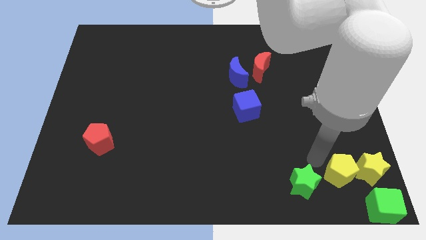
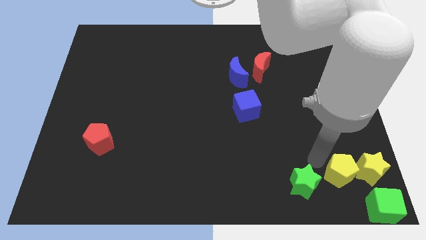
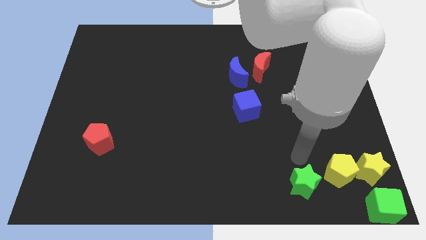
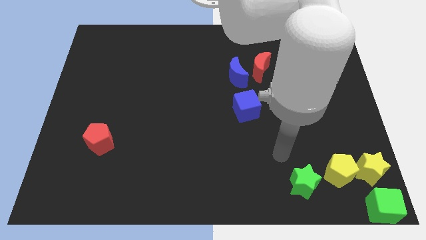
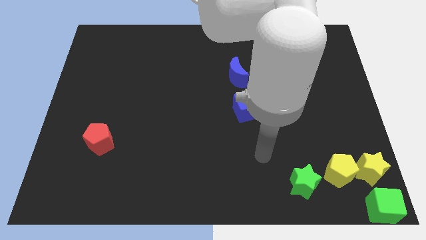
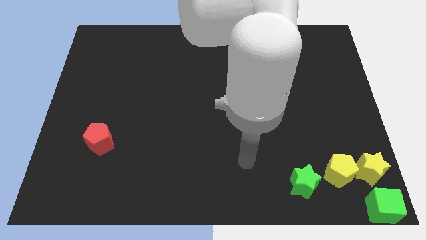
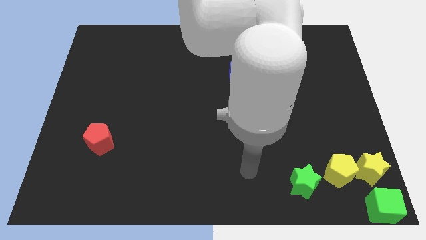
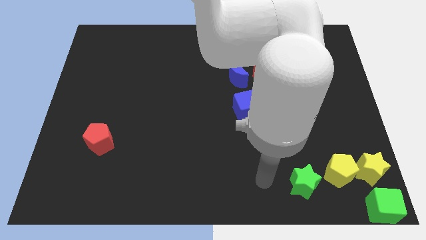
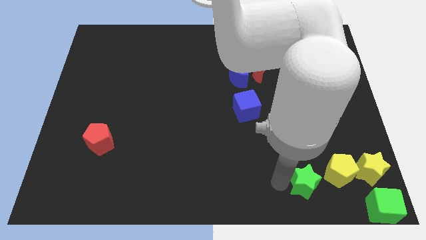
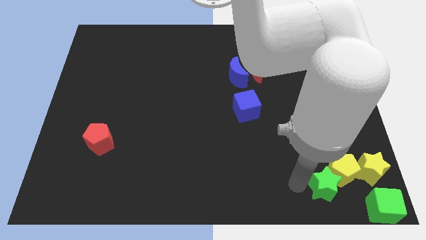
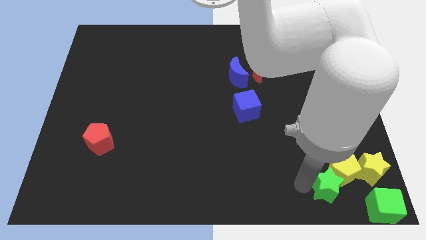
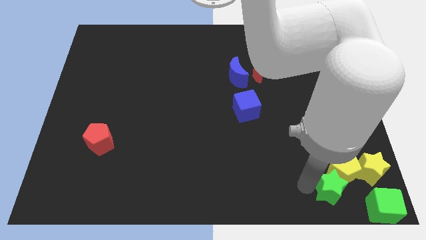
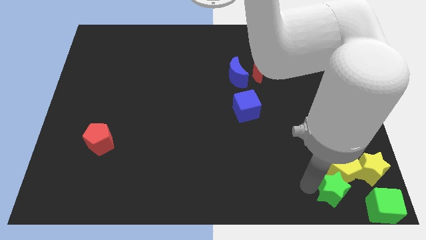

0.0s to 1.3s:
push the green star towards the yellow blocks

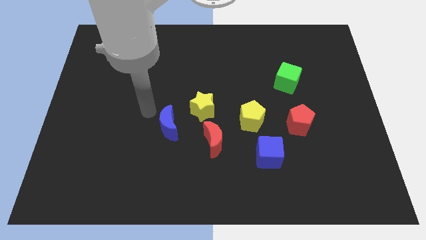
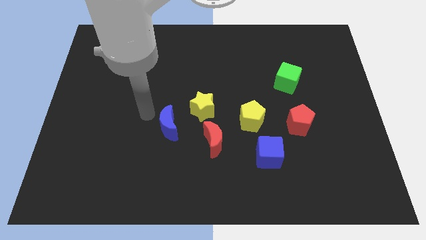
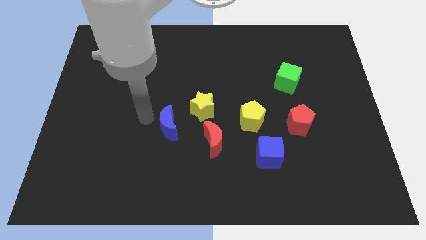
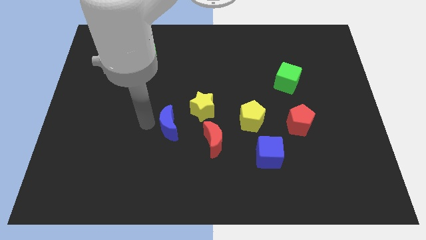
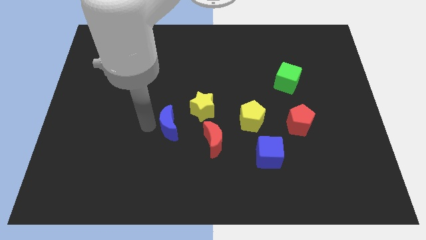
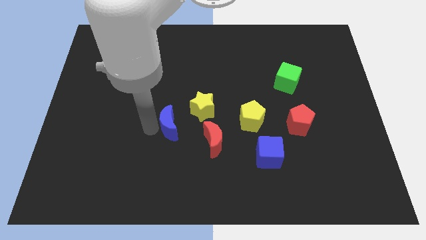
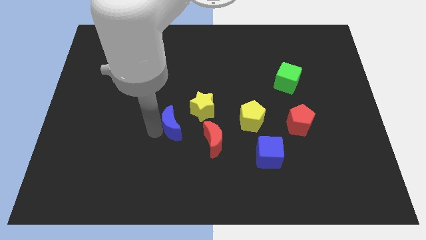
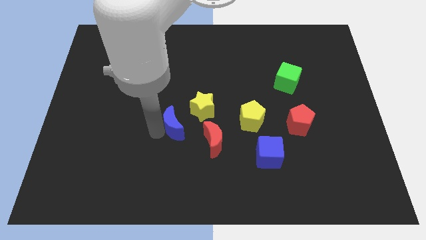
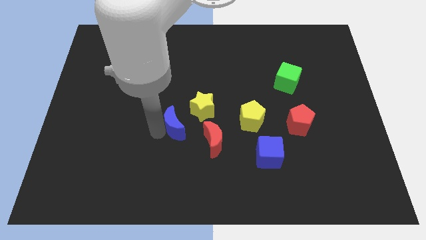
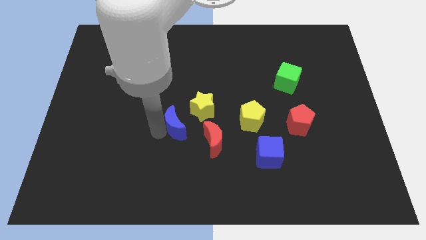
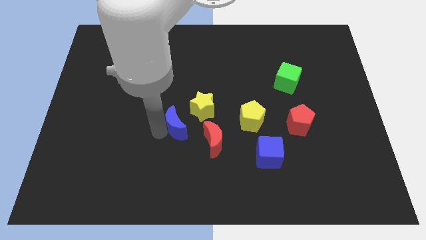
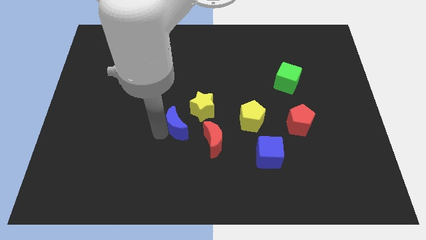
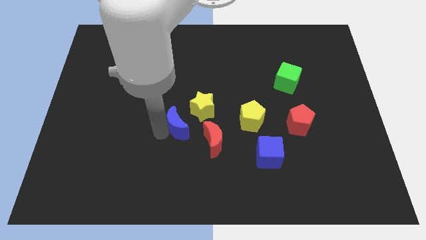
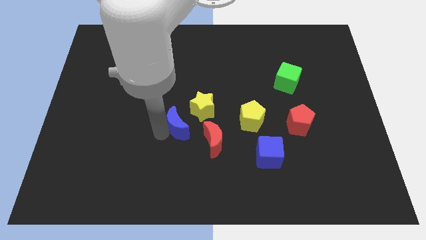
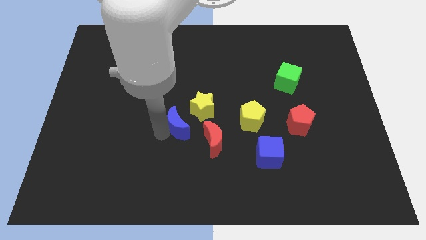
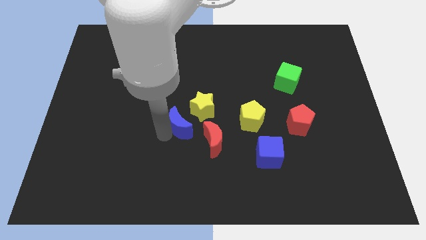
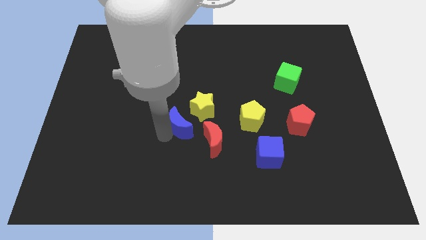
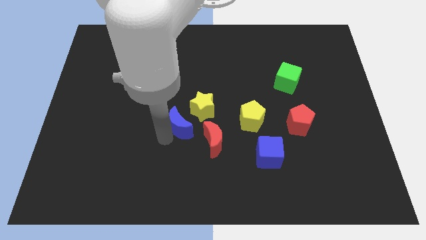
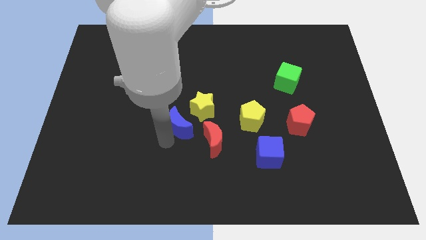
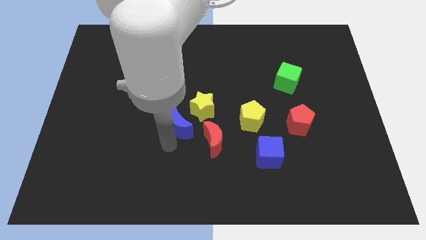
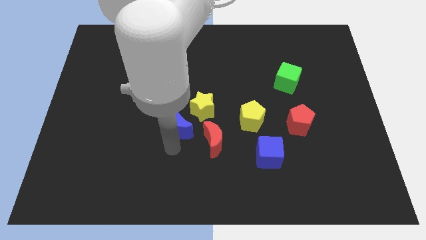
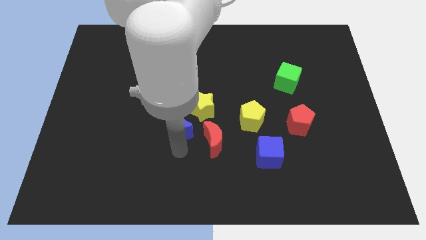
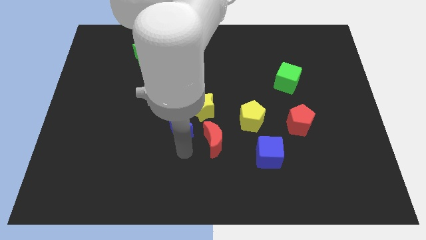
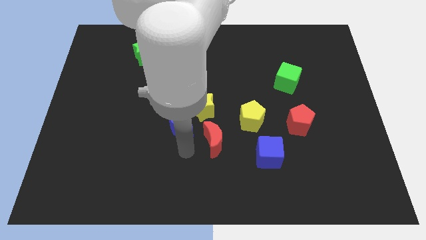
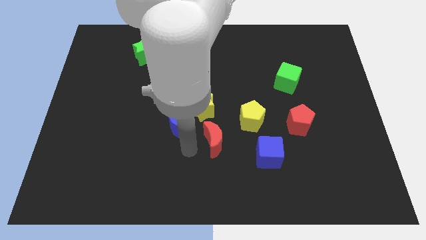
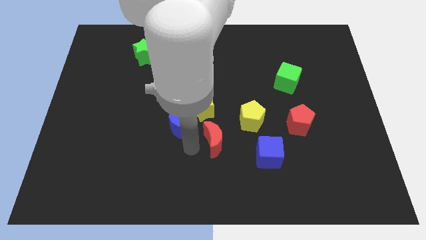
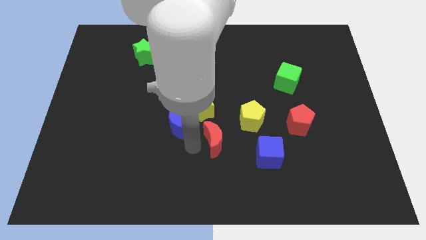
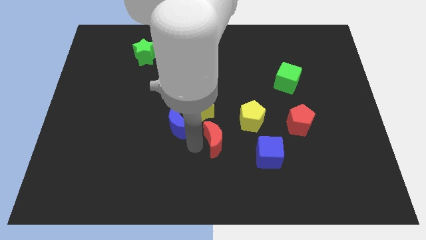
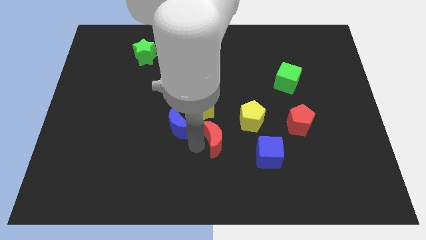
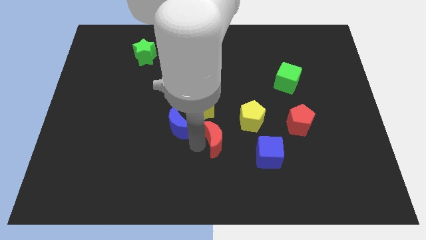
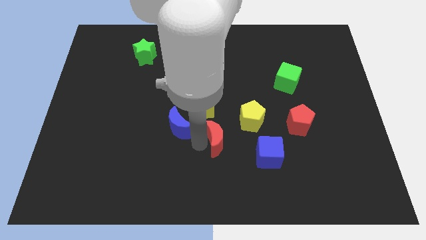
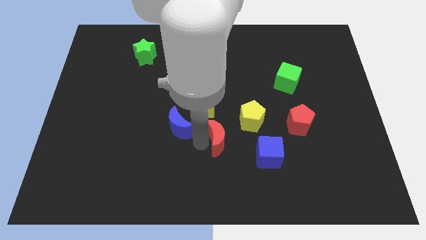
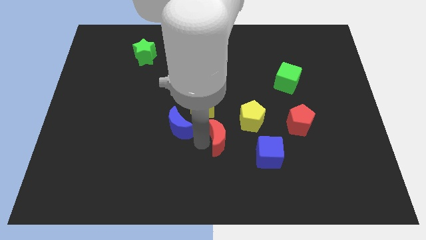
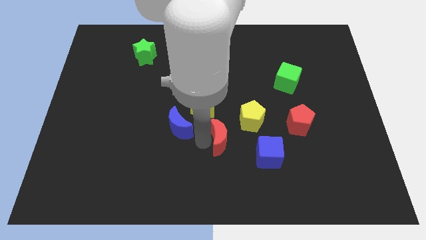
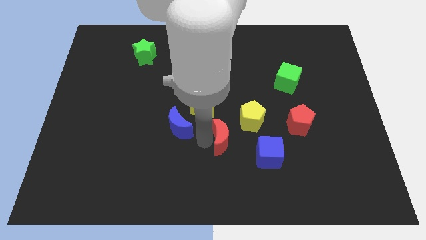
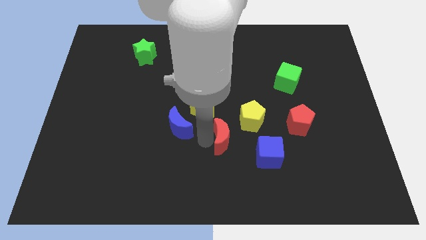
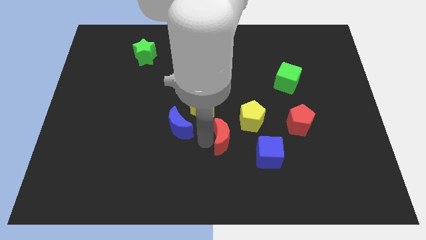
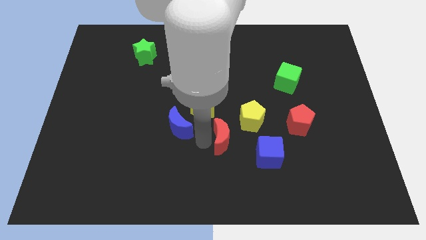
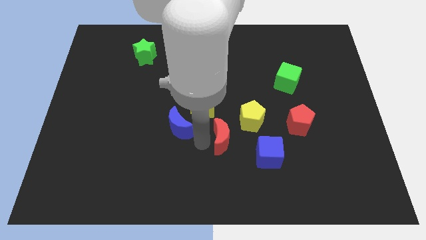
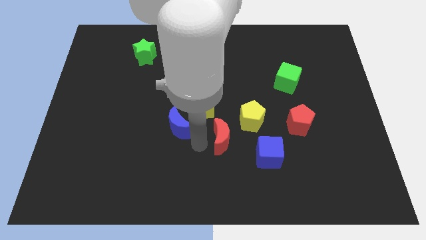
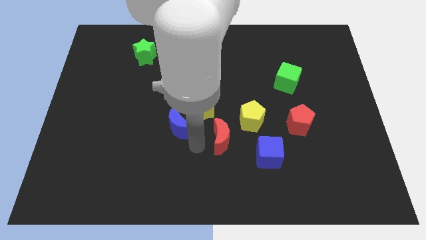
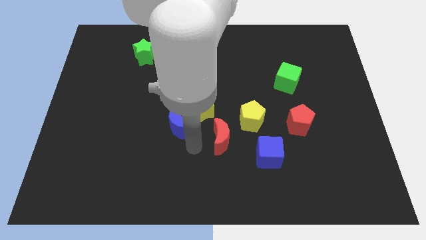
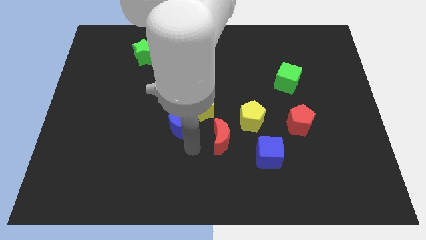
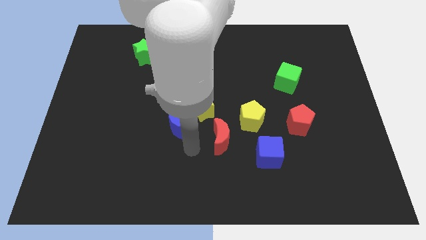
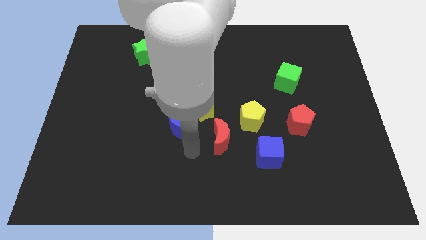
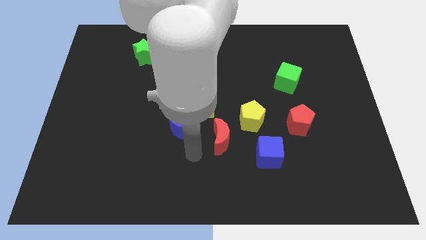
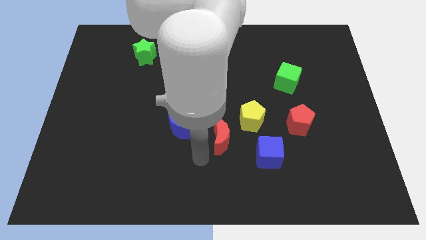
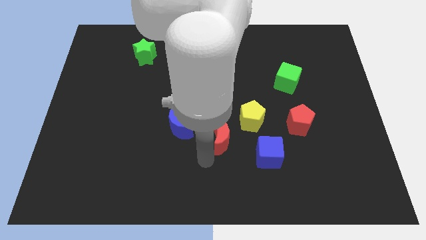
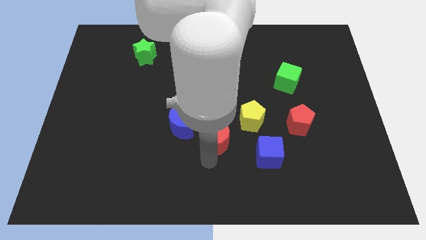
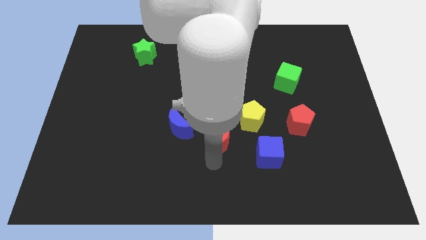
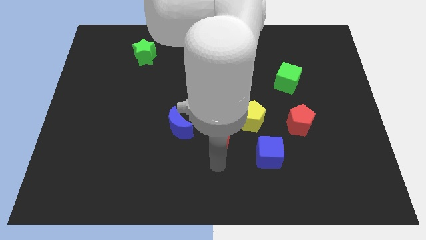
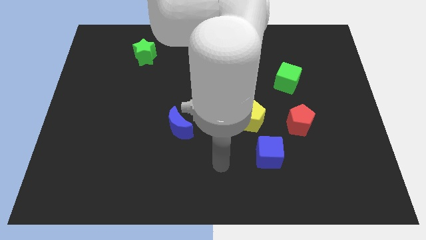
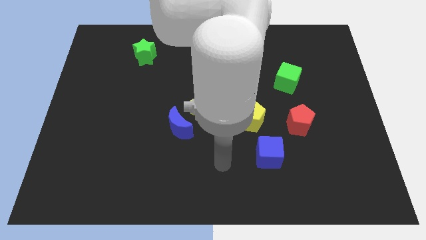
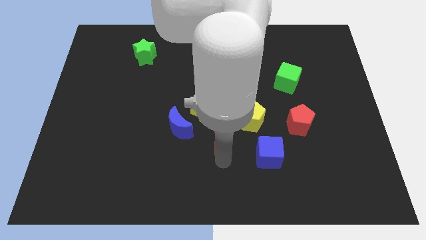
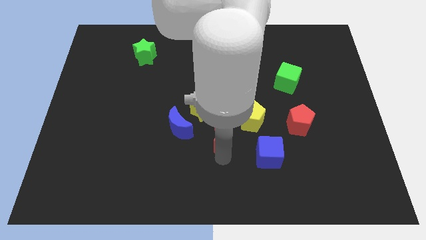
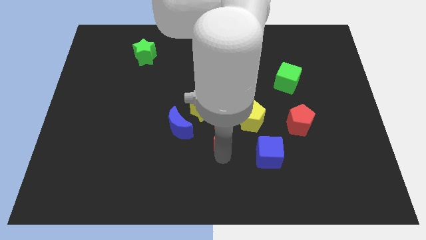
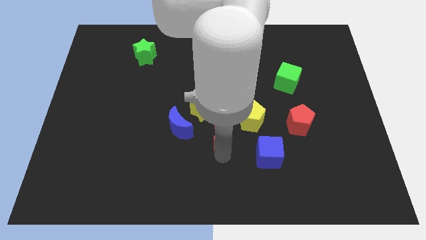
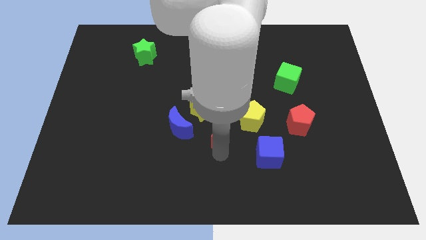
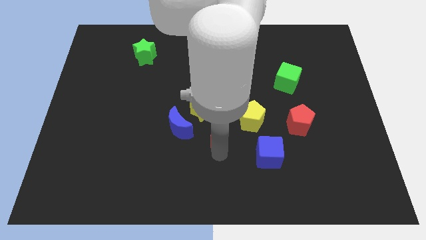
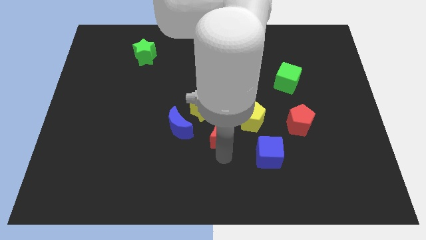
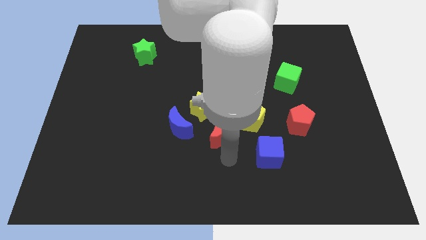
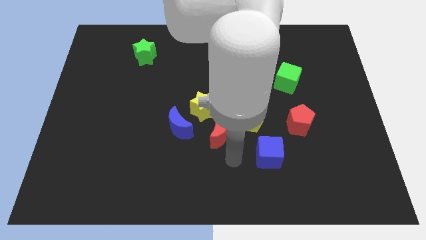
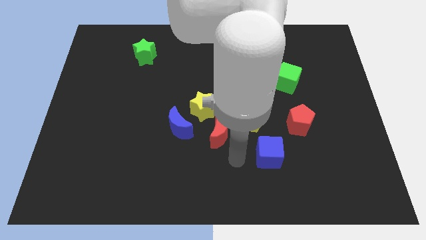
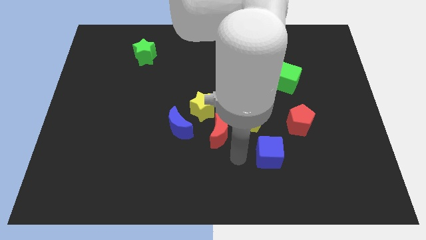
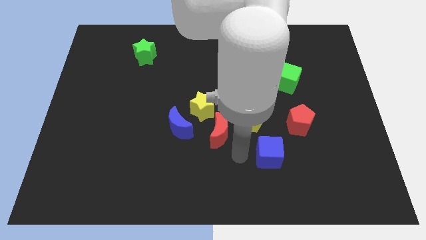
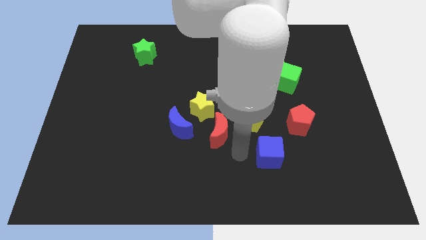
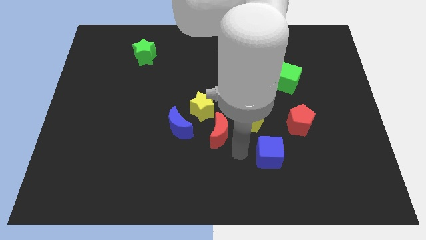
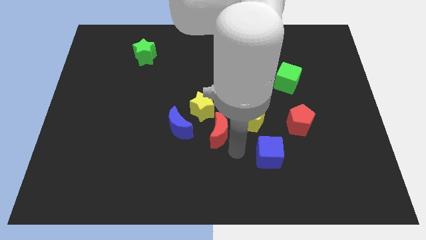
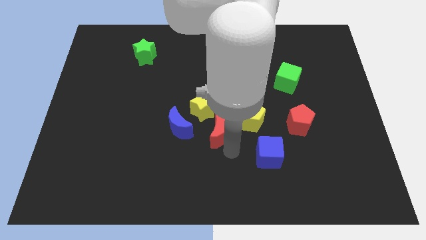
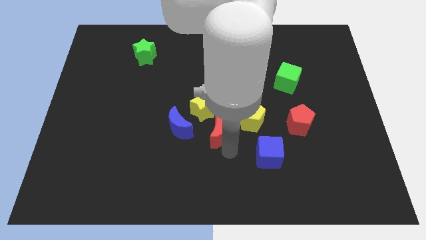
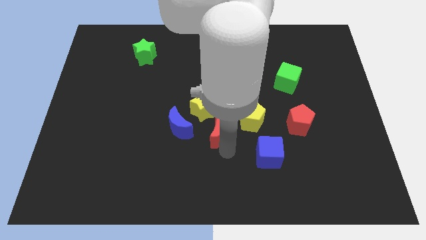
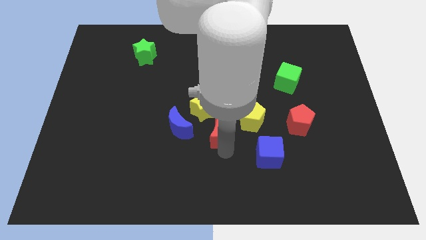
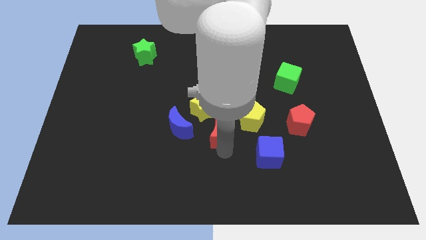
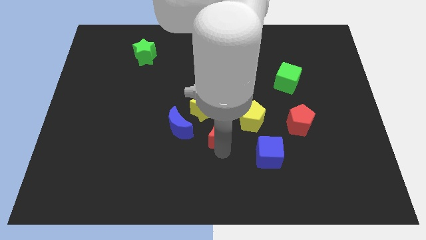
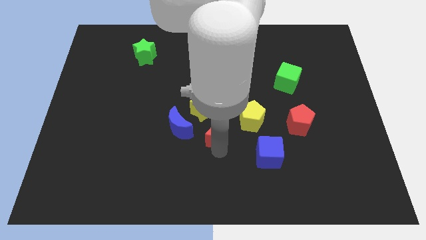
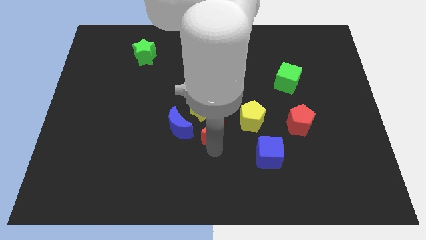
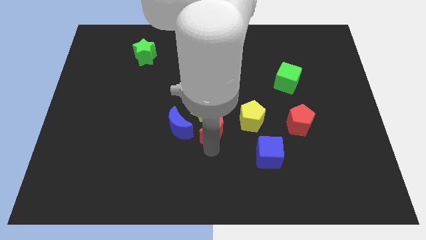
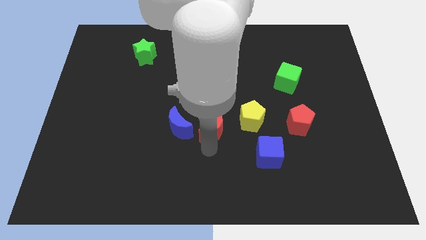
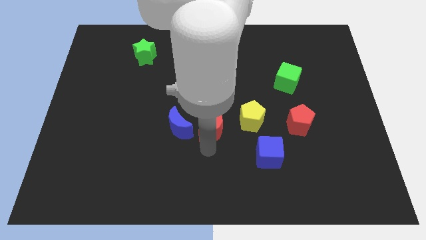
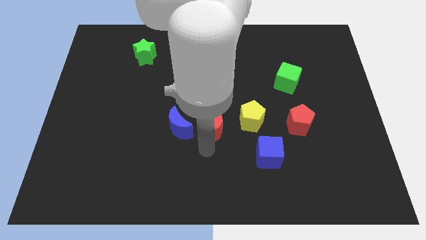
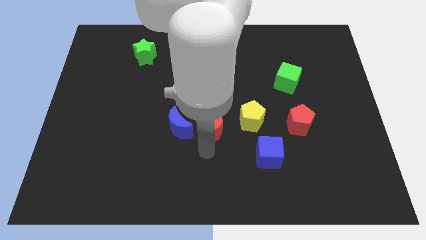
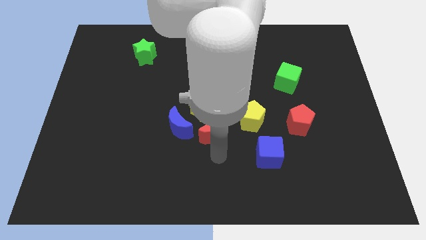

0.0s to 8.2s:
move the red crescent and blue crescent near to the yellow star
